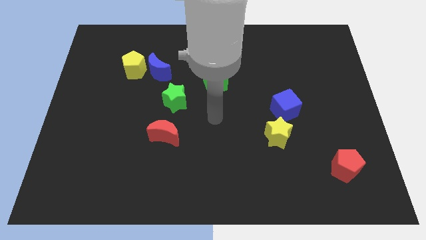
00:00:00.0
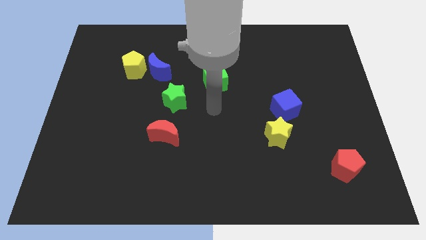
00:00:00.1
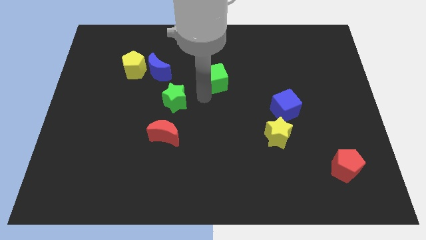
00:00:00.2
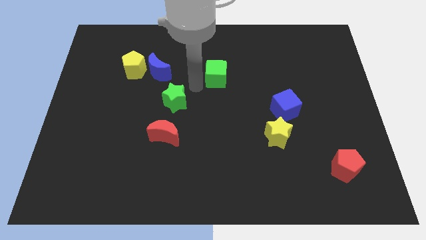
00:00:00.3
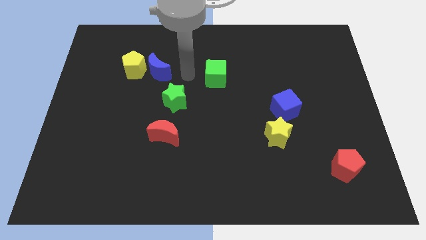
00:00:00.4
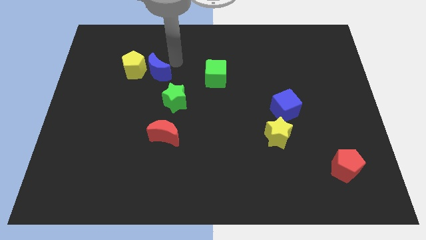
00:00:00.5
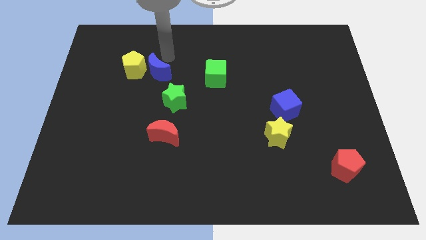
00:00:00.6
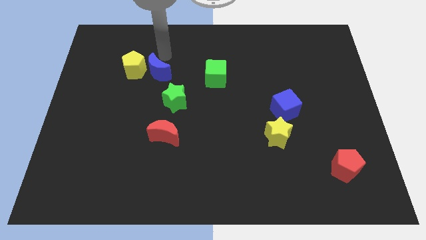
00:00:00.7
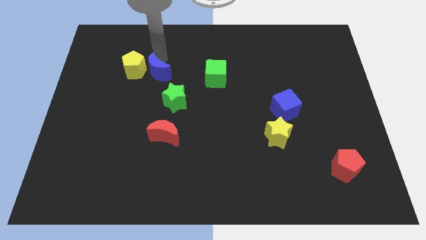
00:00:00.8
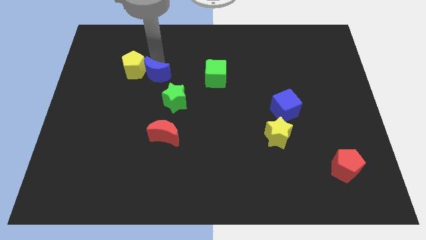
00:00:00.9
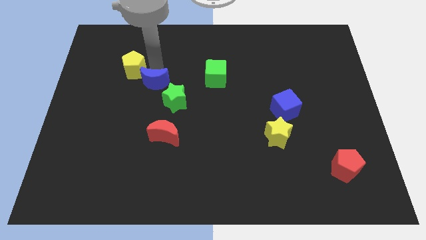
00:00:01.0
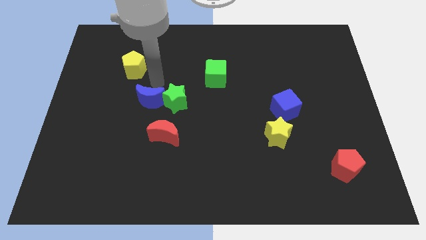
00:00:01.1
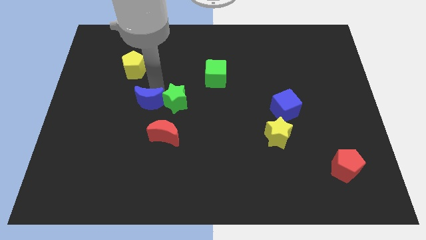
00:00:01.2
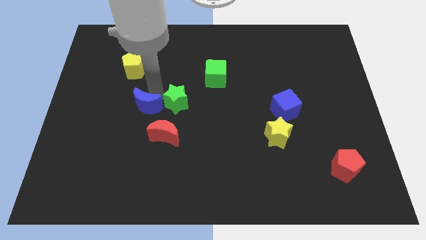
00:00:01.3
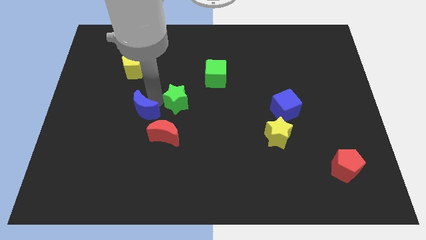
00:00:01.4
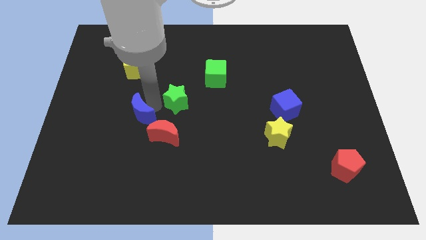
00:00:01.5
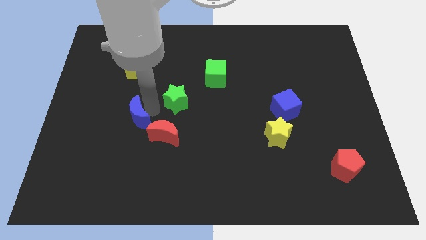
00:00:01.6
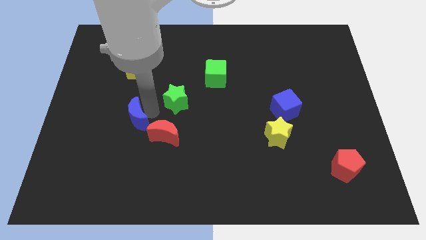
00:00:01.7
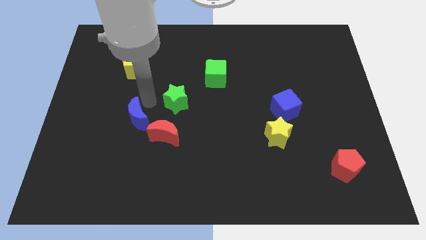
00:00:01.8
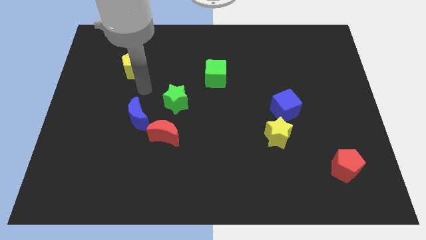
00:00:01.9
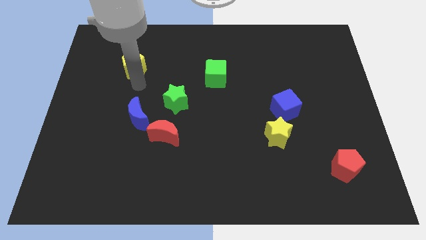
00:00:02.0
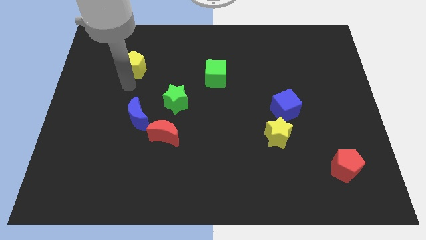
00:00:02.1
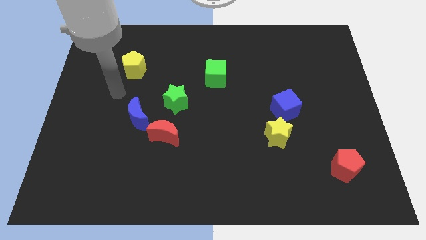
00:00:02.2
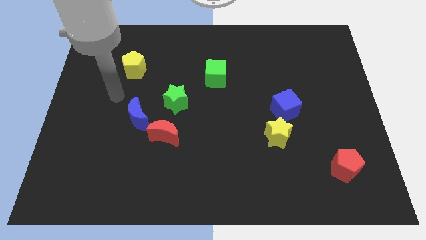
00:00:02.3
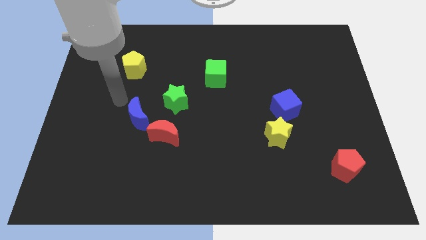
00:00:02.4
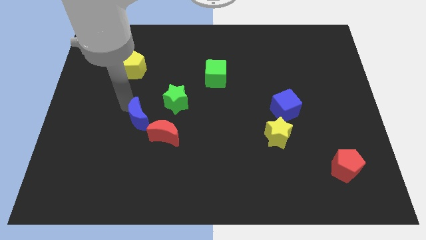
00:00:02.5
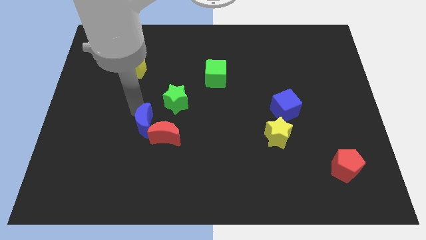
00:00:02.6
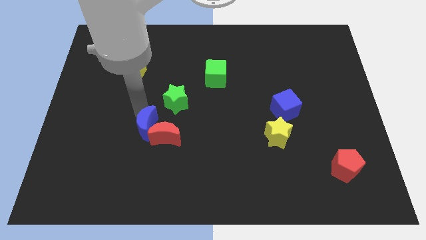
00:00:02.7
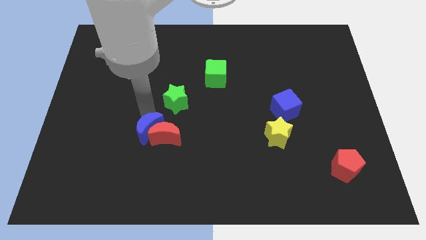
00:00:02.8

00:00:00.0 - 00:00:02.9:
move the blue moon to the red moon

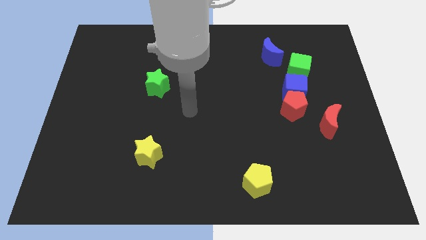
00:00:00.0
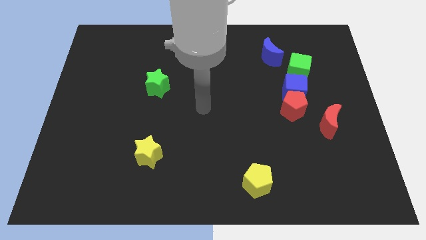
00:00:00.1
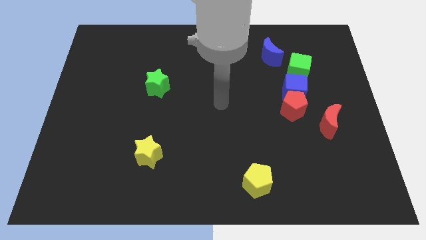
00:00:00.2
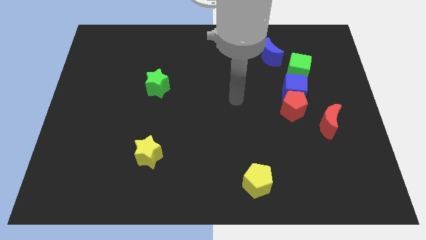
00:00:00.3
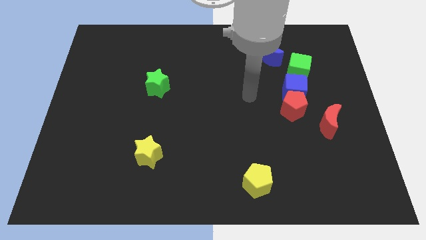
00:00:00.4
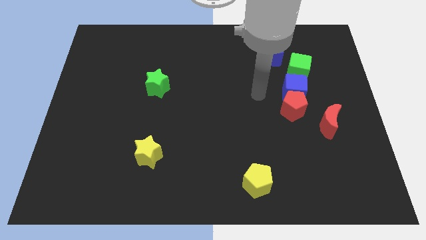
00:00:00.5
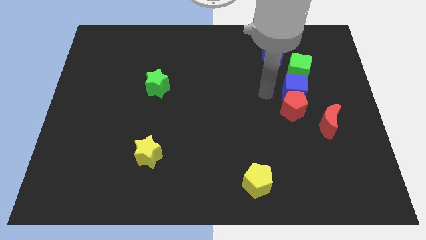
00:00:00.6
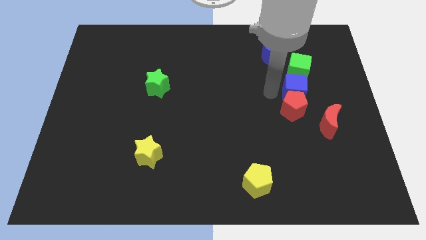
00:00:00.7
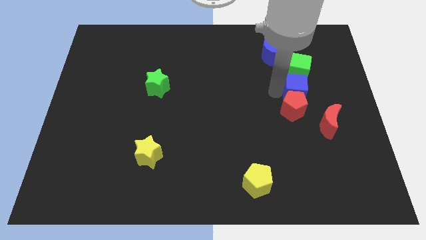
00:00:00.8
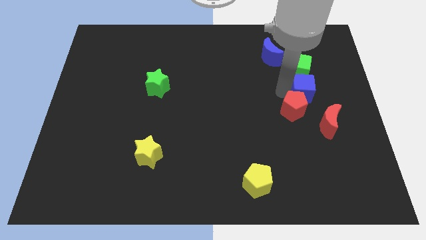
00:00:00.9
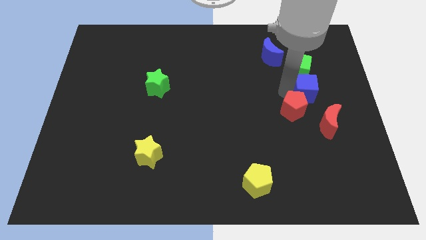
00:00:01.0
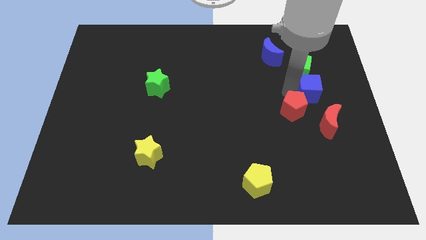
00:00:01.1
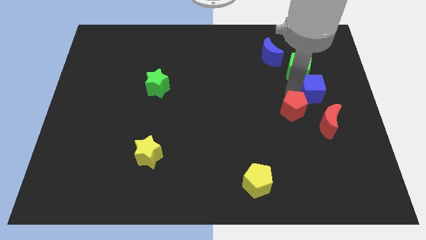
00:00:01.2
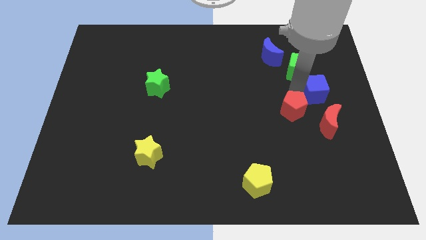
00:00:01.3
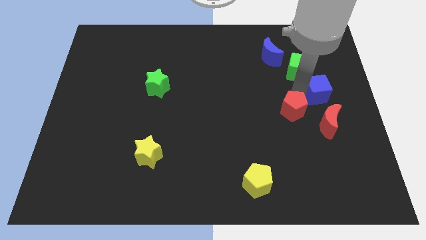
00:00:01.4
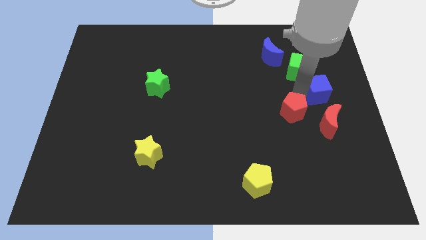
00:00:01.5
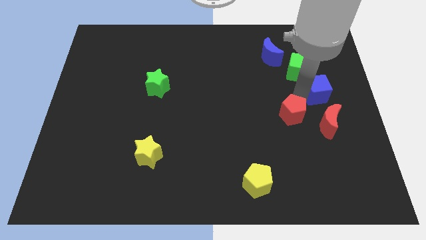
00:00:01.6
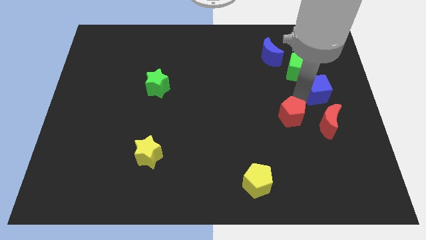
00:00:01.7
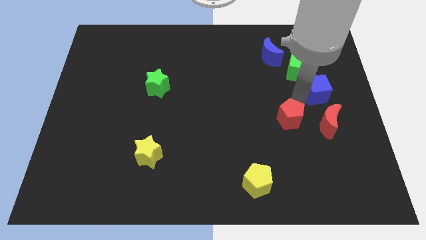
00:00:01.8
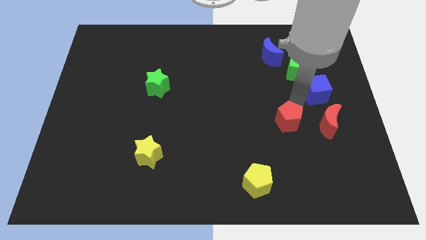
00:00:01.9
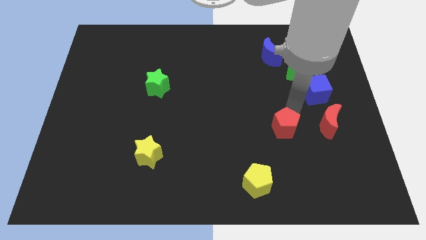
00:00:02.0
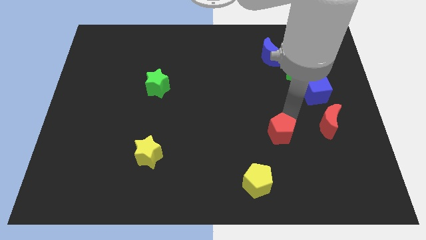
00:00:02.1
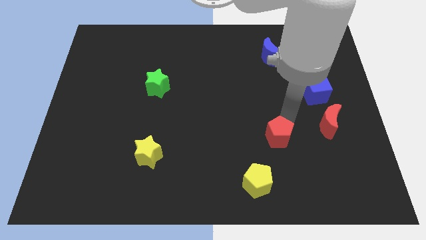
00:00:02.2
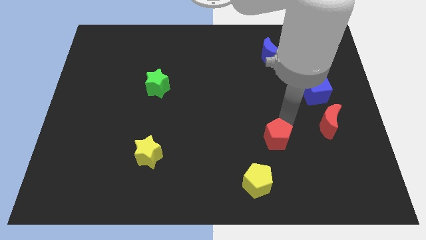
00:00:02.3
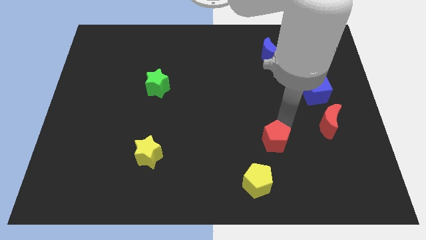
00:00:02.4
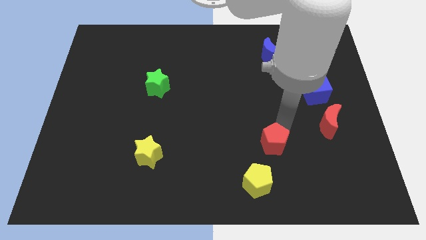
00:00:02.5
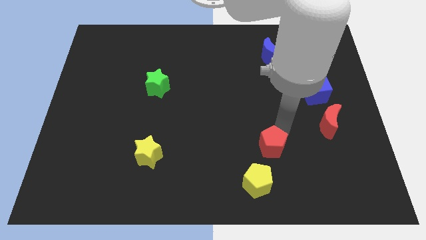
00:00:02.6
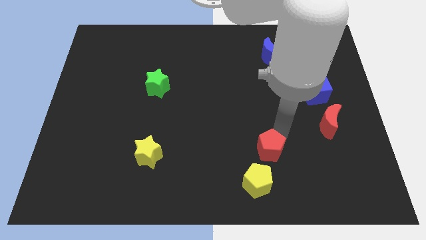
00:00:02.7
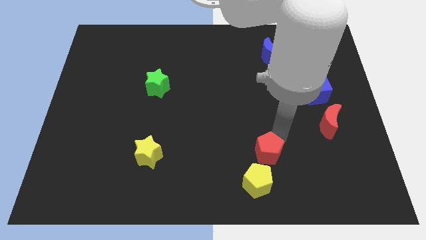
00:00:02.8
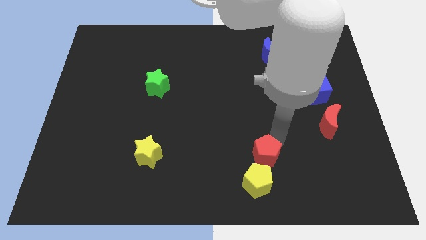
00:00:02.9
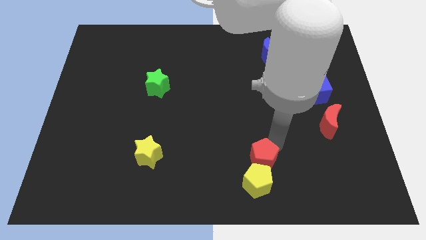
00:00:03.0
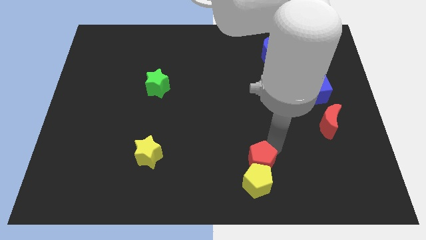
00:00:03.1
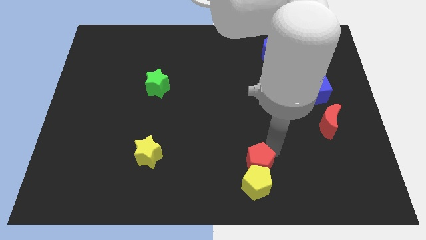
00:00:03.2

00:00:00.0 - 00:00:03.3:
push the red pentagon close to the yellow pentagon

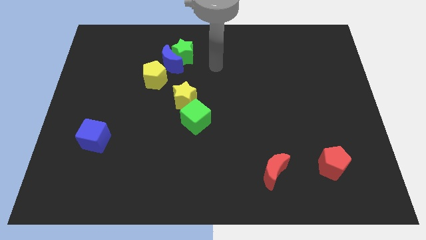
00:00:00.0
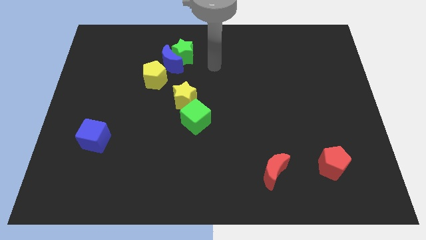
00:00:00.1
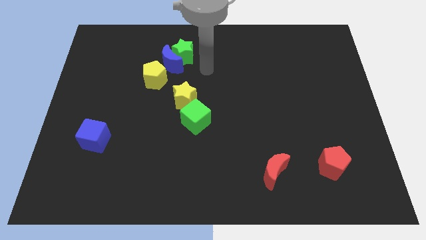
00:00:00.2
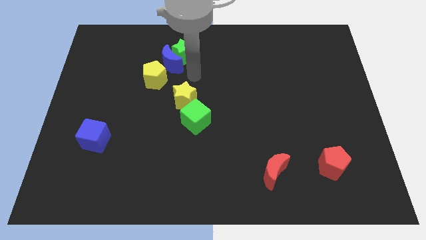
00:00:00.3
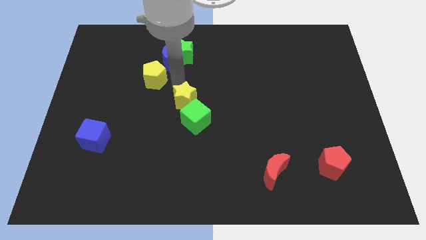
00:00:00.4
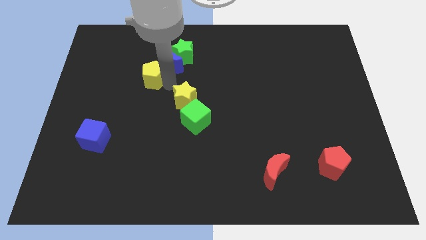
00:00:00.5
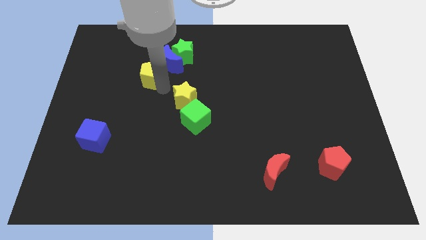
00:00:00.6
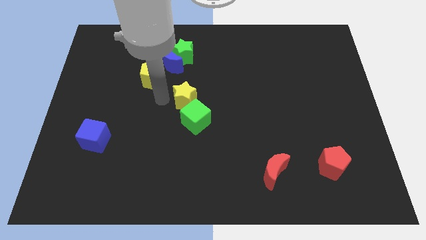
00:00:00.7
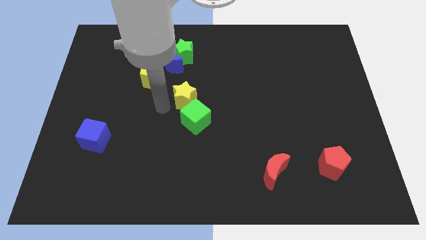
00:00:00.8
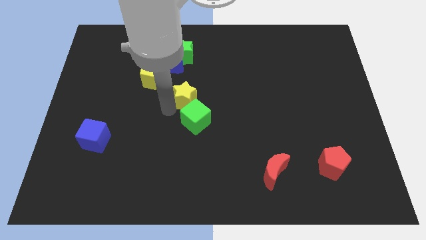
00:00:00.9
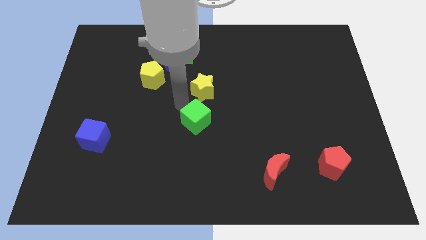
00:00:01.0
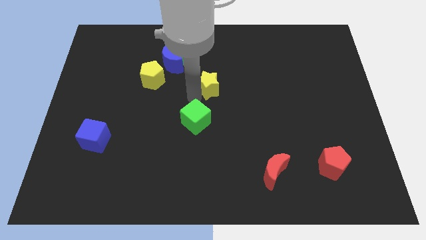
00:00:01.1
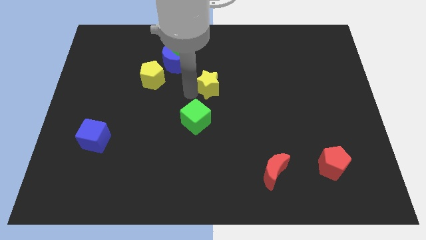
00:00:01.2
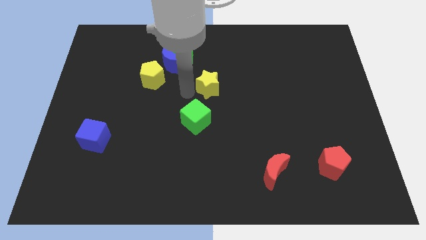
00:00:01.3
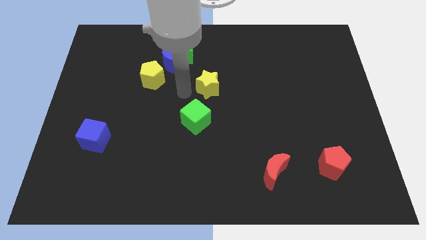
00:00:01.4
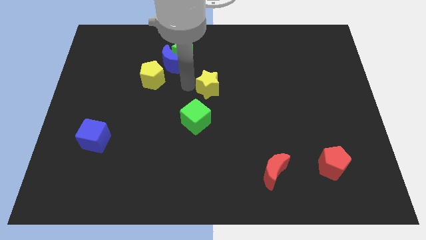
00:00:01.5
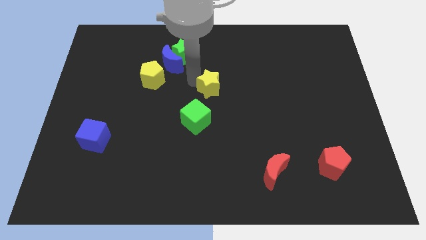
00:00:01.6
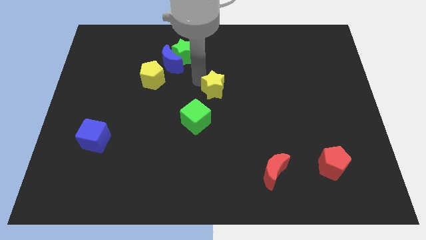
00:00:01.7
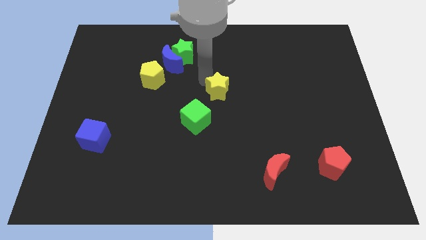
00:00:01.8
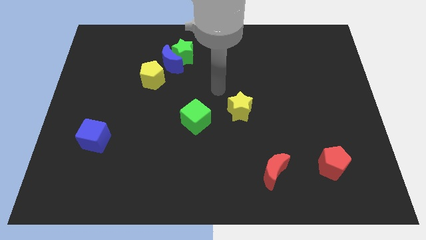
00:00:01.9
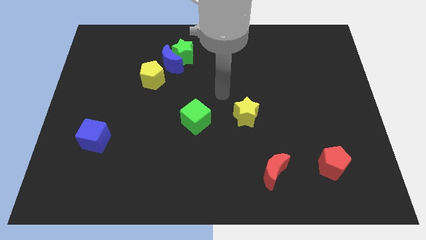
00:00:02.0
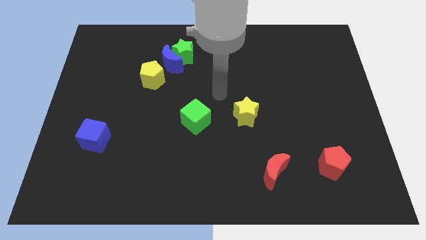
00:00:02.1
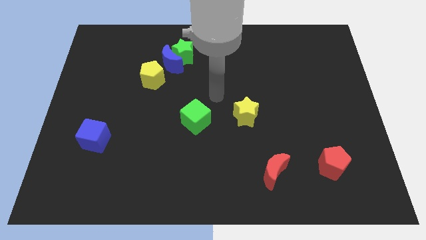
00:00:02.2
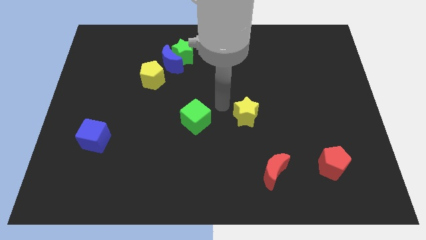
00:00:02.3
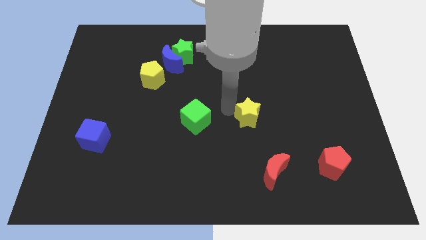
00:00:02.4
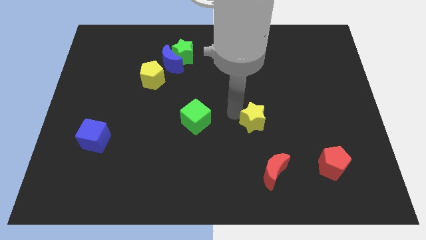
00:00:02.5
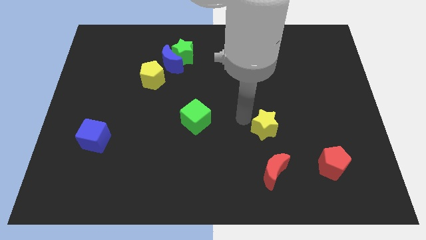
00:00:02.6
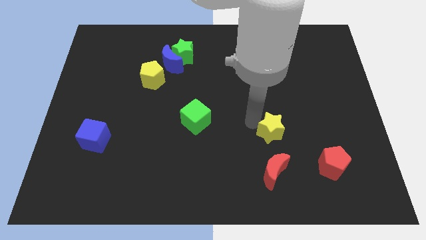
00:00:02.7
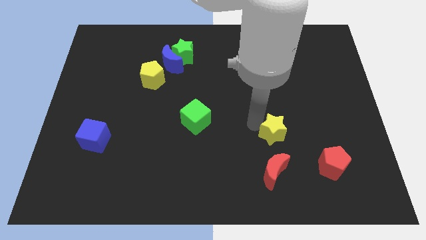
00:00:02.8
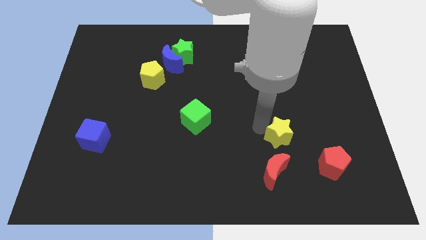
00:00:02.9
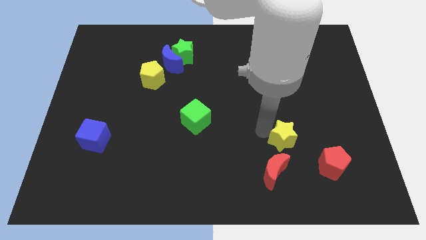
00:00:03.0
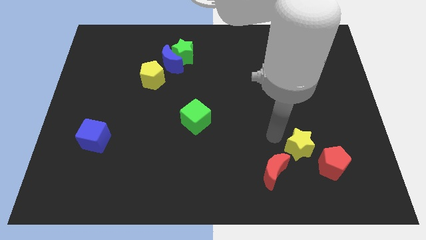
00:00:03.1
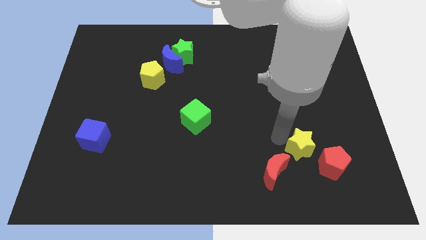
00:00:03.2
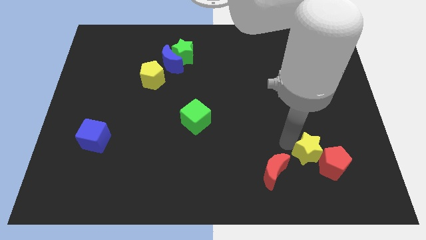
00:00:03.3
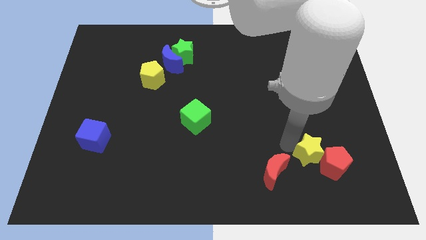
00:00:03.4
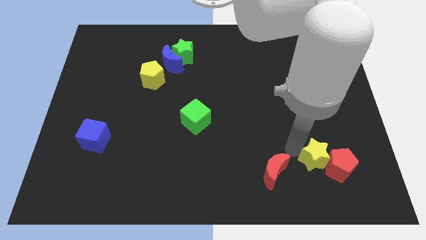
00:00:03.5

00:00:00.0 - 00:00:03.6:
move the yellow star to the red pentagon
